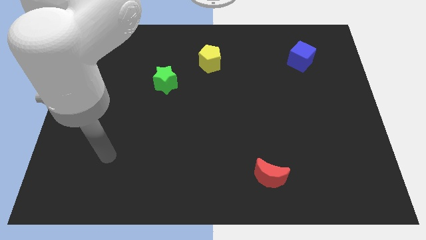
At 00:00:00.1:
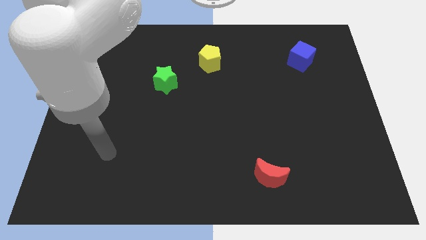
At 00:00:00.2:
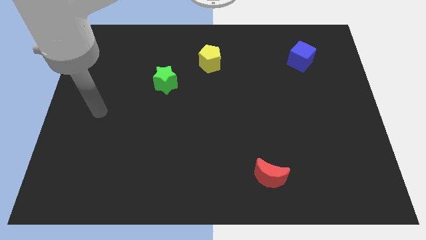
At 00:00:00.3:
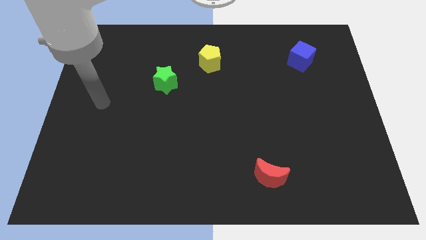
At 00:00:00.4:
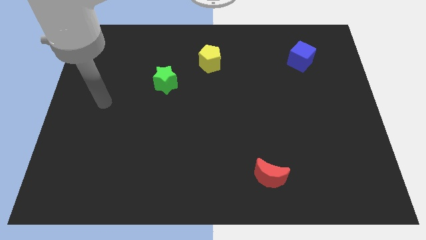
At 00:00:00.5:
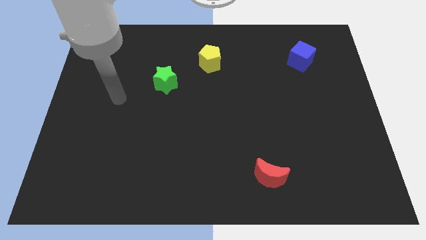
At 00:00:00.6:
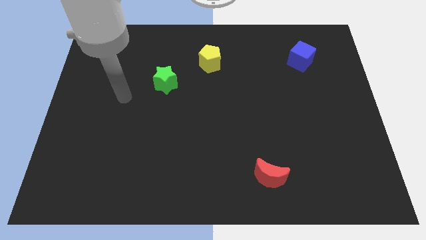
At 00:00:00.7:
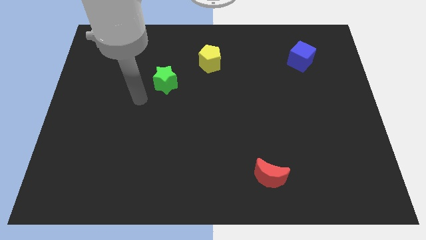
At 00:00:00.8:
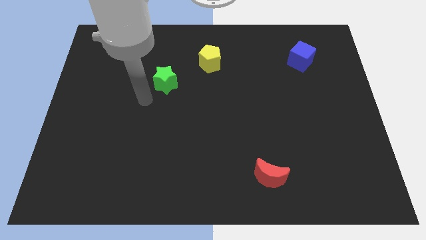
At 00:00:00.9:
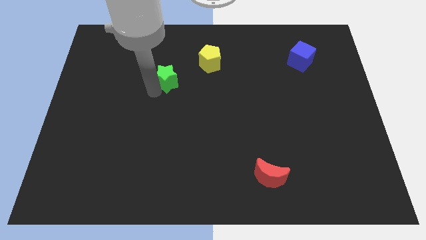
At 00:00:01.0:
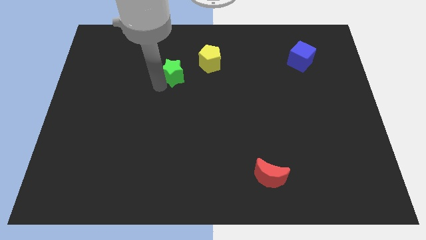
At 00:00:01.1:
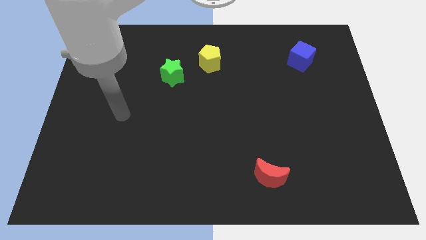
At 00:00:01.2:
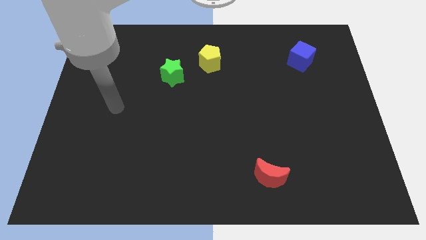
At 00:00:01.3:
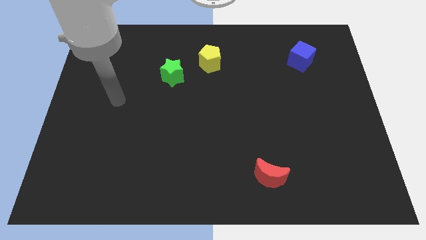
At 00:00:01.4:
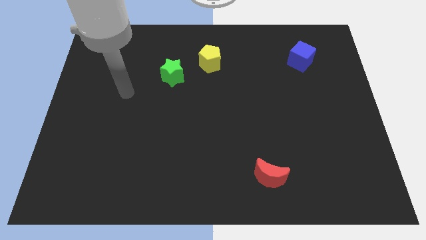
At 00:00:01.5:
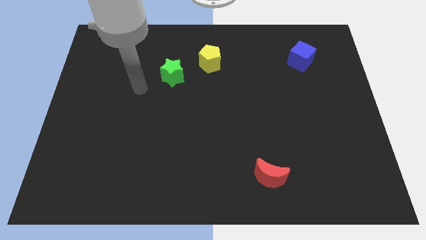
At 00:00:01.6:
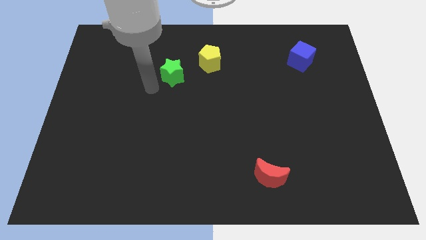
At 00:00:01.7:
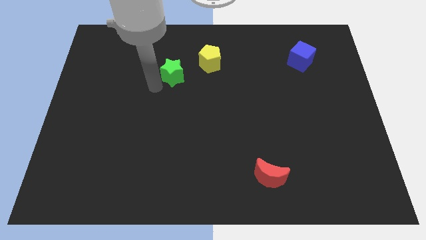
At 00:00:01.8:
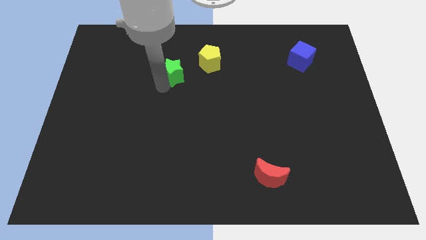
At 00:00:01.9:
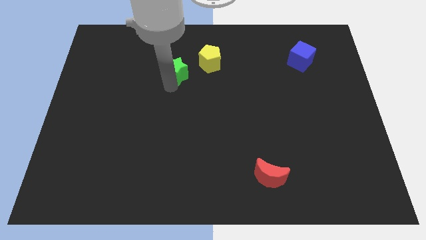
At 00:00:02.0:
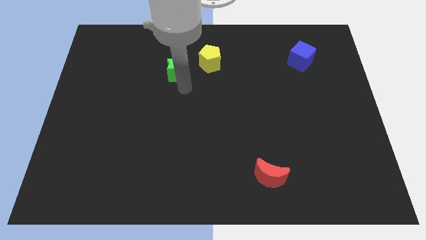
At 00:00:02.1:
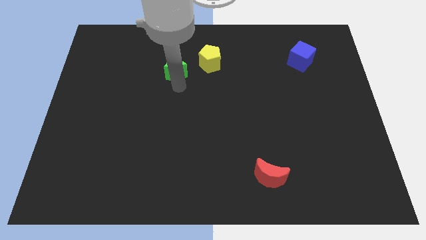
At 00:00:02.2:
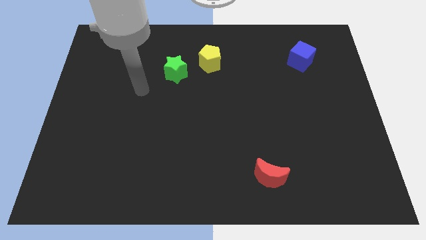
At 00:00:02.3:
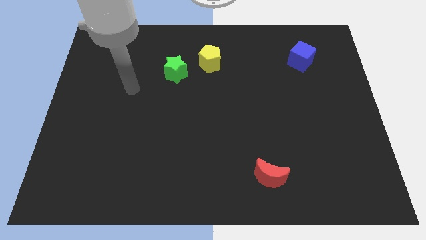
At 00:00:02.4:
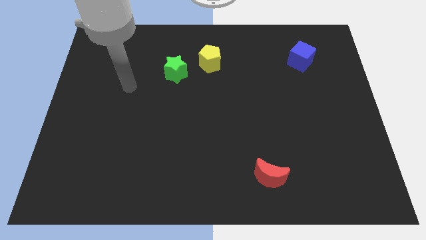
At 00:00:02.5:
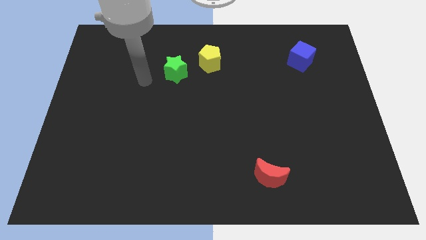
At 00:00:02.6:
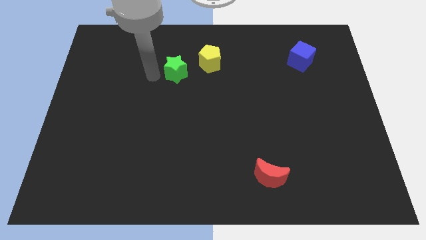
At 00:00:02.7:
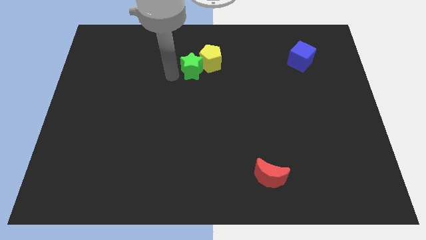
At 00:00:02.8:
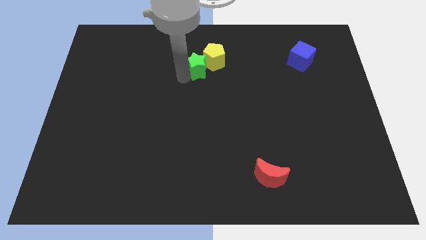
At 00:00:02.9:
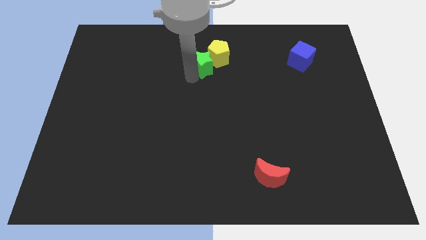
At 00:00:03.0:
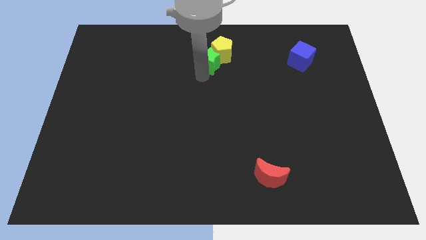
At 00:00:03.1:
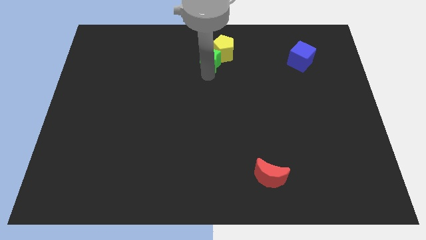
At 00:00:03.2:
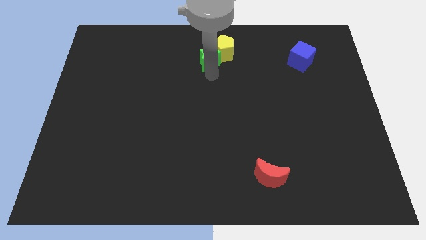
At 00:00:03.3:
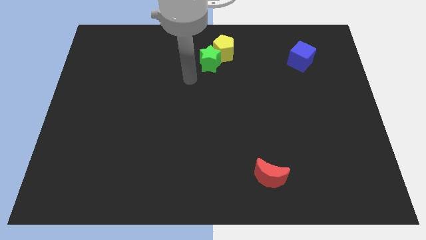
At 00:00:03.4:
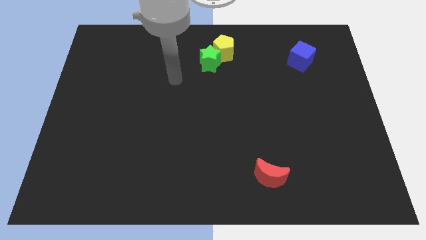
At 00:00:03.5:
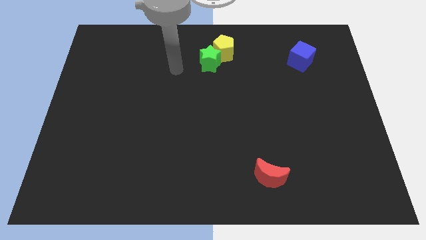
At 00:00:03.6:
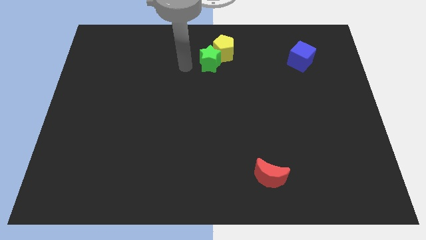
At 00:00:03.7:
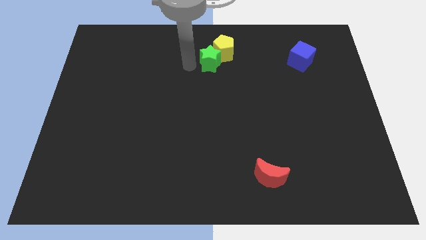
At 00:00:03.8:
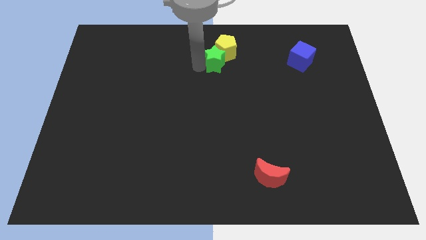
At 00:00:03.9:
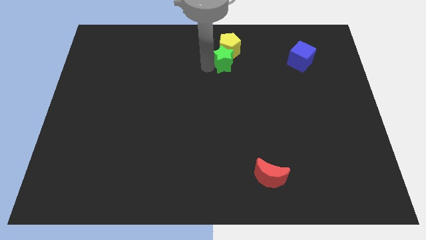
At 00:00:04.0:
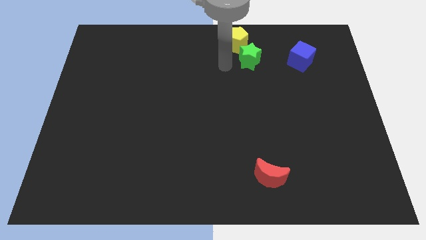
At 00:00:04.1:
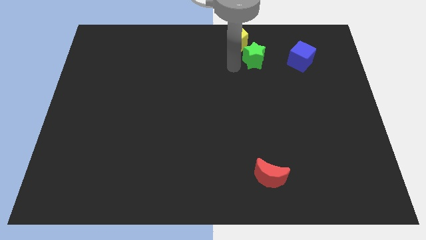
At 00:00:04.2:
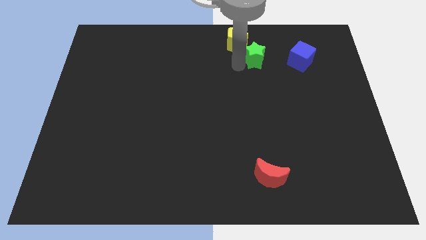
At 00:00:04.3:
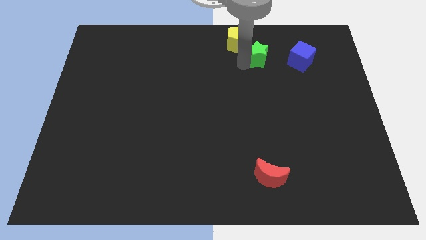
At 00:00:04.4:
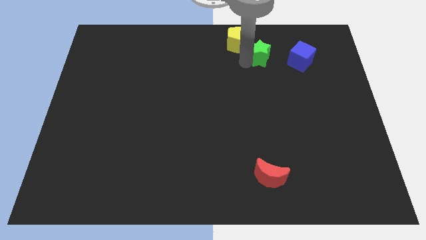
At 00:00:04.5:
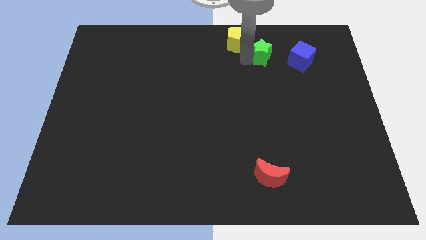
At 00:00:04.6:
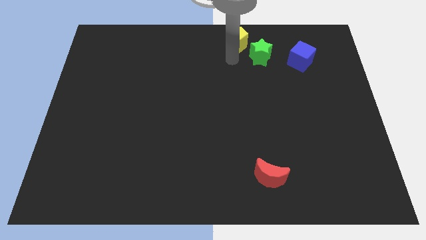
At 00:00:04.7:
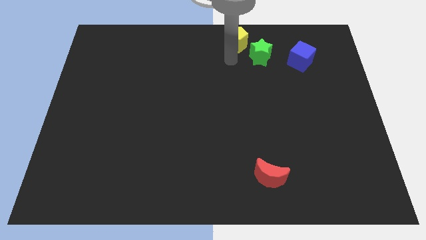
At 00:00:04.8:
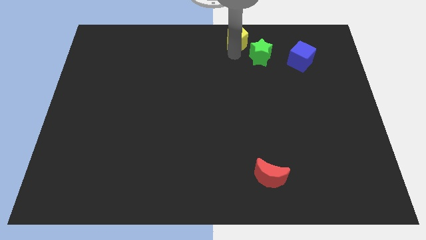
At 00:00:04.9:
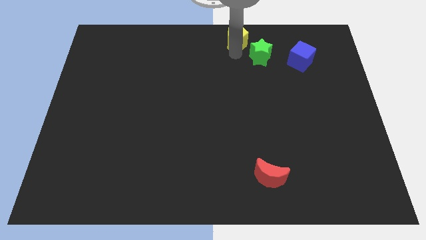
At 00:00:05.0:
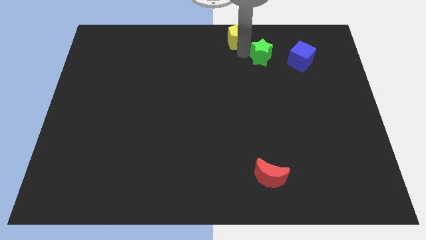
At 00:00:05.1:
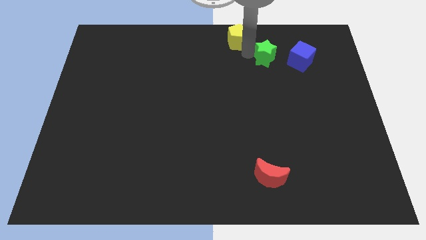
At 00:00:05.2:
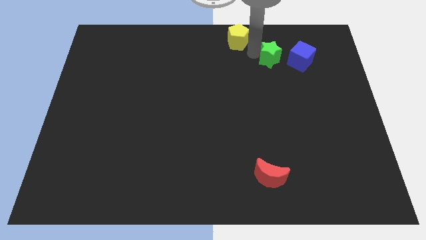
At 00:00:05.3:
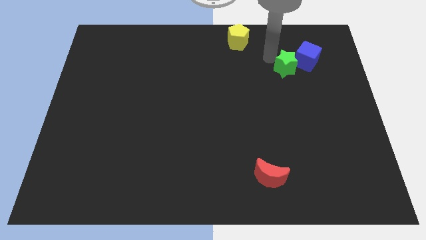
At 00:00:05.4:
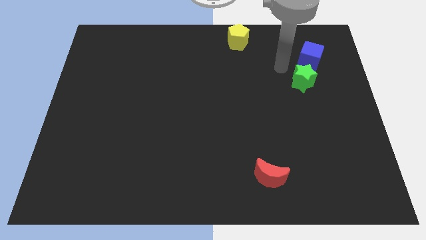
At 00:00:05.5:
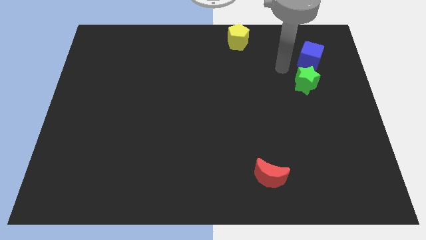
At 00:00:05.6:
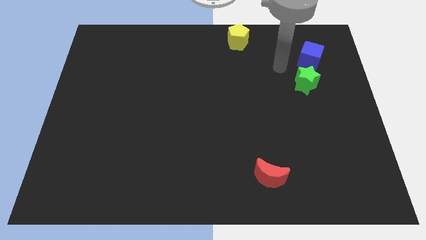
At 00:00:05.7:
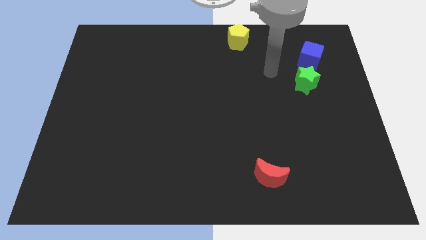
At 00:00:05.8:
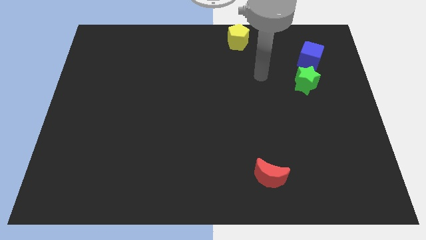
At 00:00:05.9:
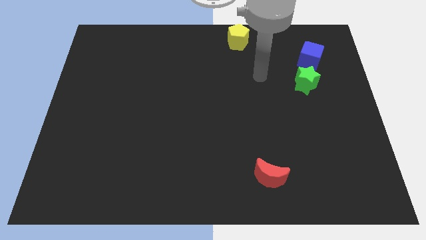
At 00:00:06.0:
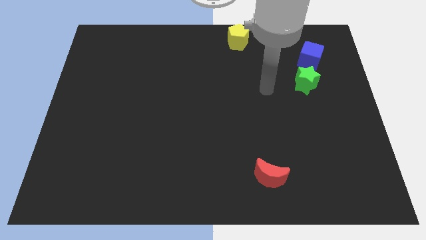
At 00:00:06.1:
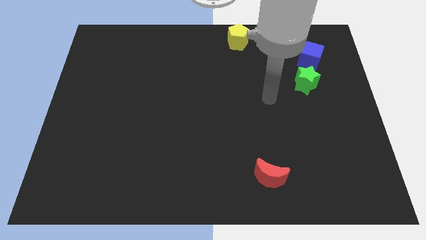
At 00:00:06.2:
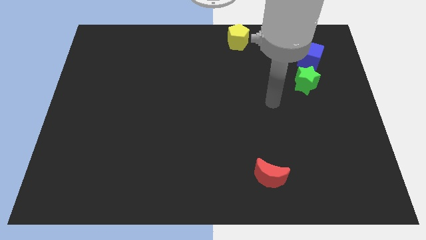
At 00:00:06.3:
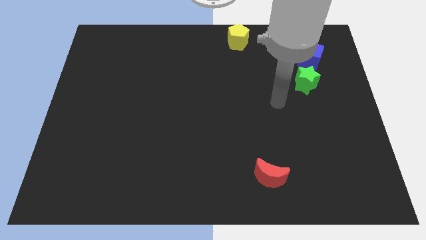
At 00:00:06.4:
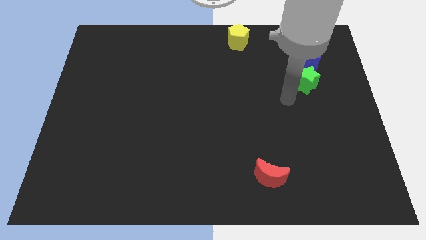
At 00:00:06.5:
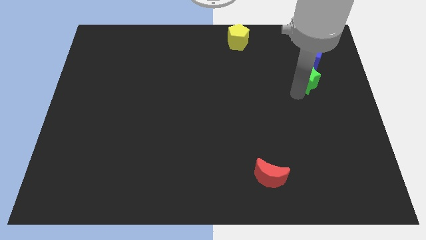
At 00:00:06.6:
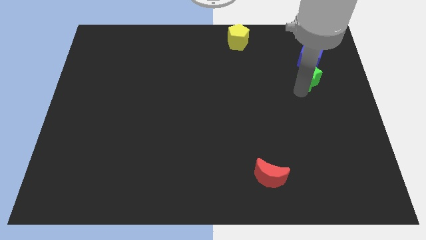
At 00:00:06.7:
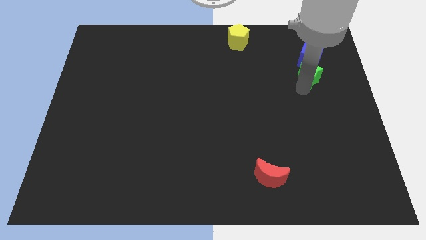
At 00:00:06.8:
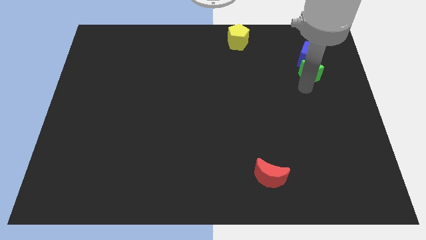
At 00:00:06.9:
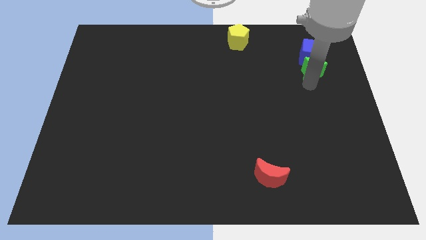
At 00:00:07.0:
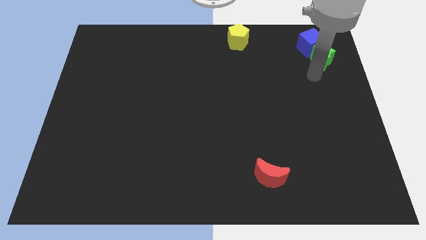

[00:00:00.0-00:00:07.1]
move the green star towards the blue cube

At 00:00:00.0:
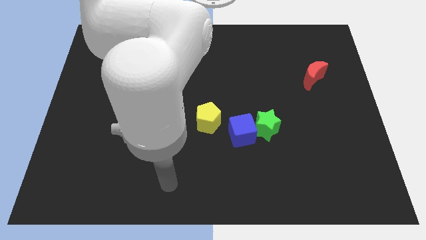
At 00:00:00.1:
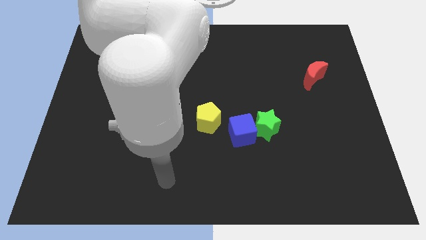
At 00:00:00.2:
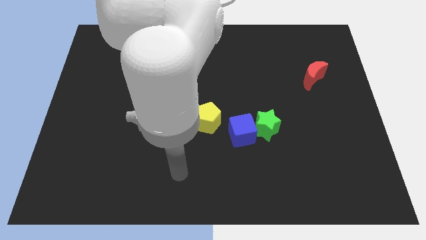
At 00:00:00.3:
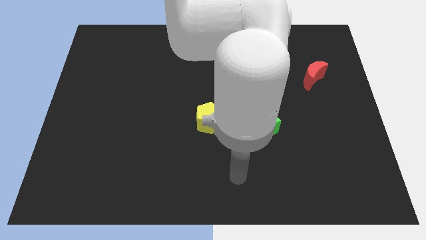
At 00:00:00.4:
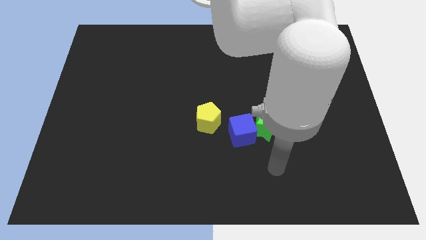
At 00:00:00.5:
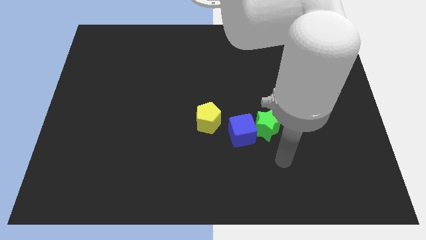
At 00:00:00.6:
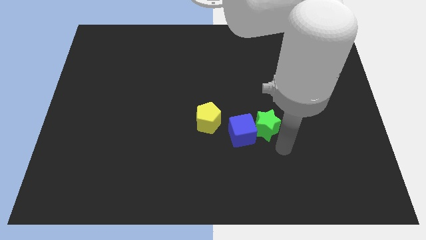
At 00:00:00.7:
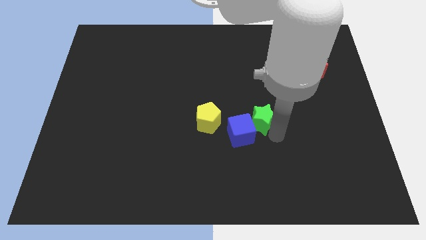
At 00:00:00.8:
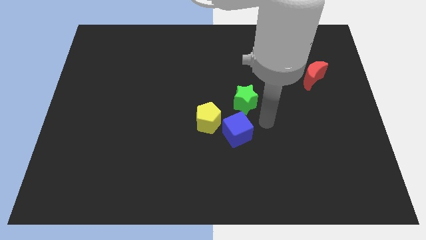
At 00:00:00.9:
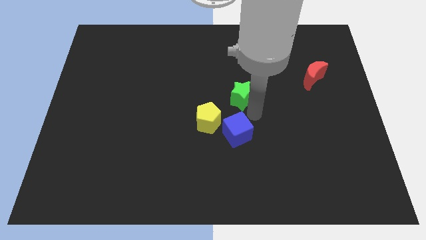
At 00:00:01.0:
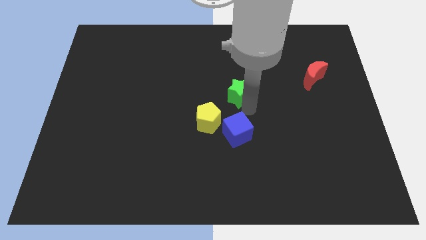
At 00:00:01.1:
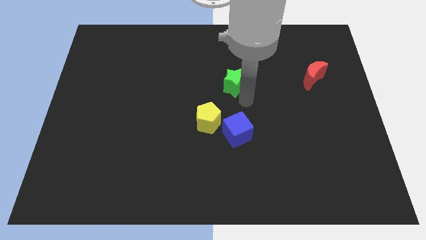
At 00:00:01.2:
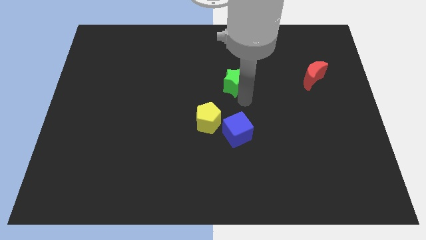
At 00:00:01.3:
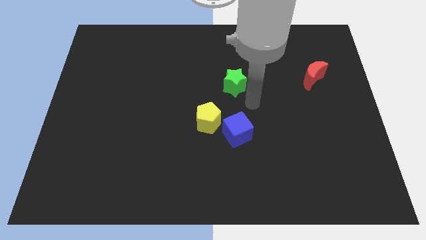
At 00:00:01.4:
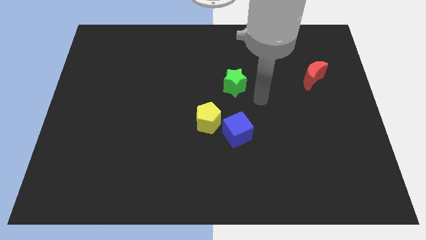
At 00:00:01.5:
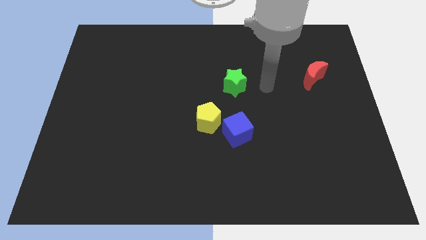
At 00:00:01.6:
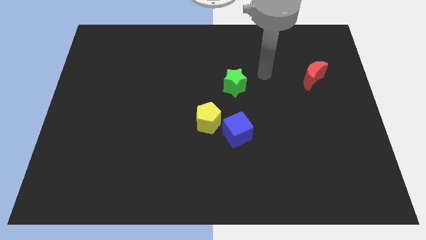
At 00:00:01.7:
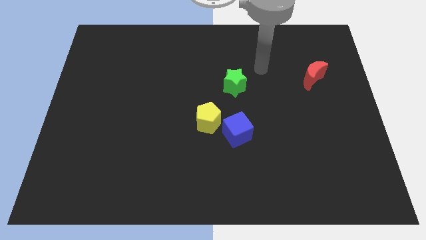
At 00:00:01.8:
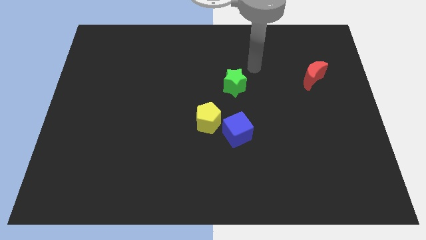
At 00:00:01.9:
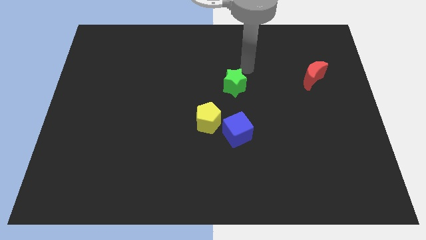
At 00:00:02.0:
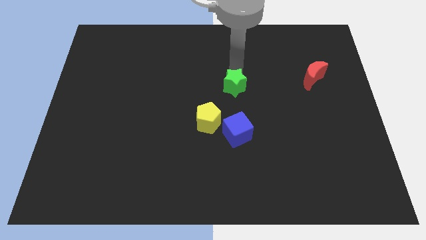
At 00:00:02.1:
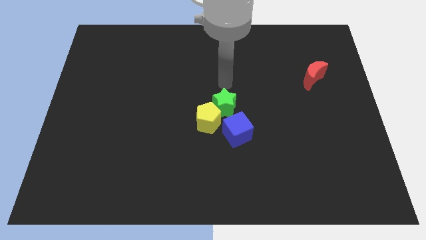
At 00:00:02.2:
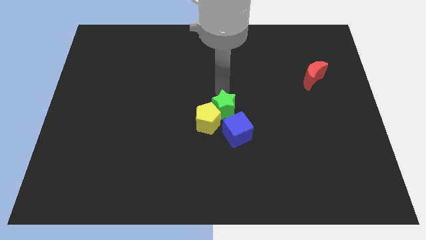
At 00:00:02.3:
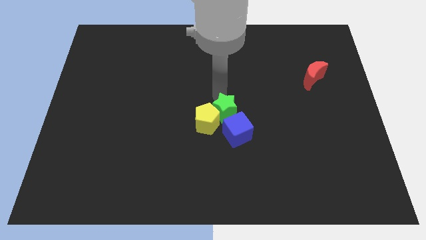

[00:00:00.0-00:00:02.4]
put the star to the yellow pentagon
